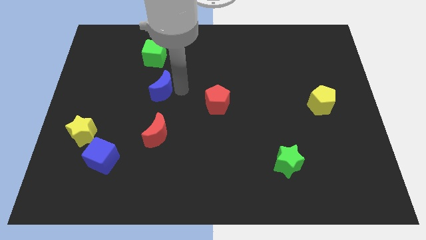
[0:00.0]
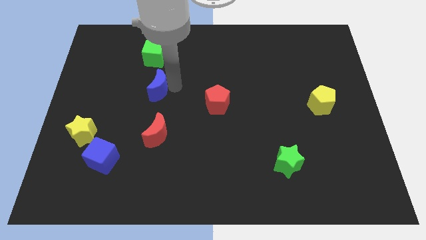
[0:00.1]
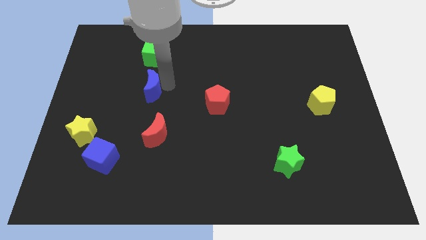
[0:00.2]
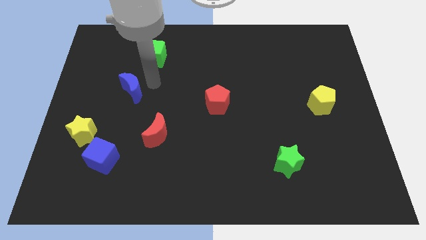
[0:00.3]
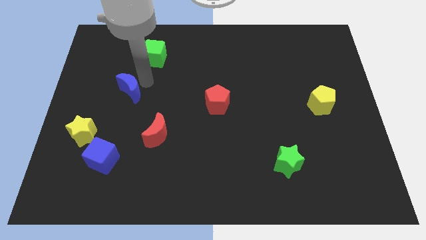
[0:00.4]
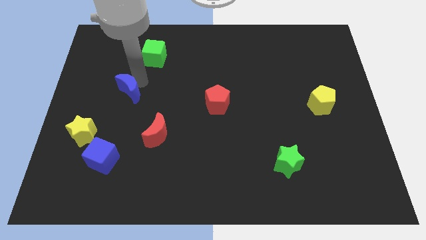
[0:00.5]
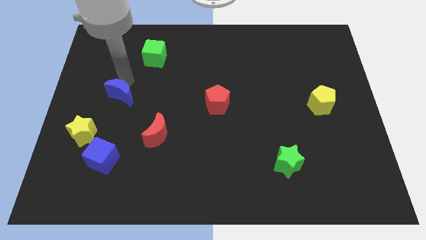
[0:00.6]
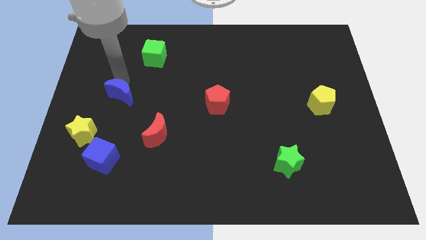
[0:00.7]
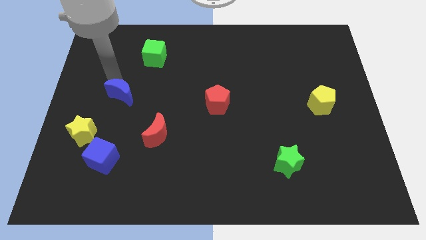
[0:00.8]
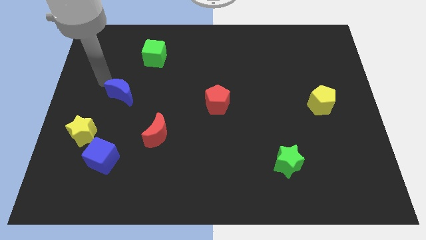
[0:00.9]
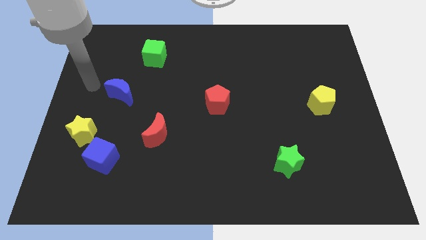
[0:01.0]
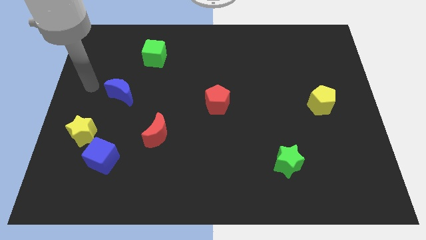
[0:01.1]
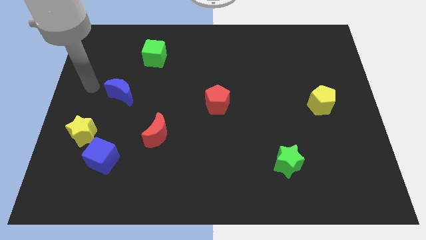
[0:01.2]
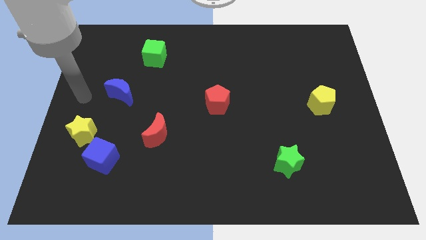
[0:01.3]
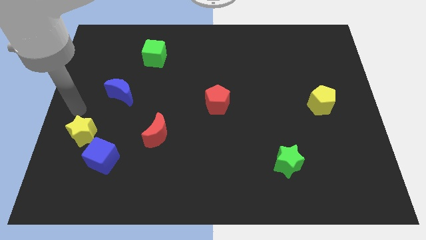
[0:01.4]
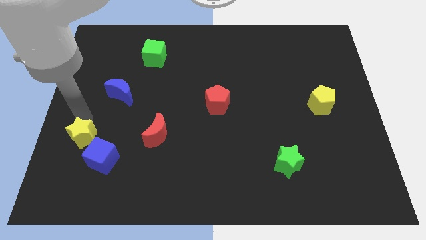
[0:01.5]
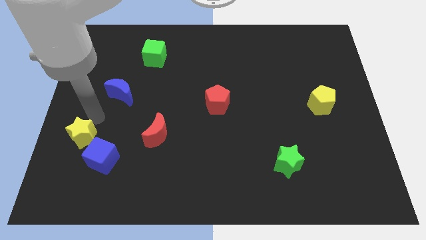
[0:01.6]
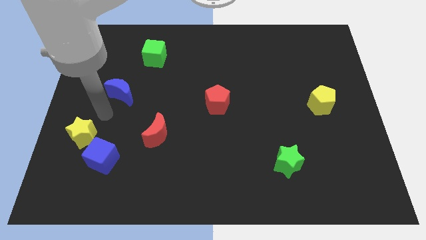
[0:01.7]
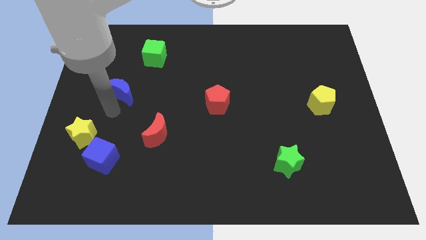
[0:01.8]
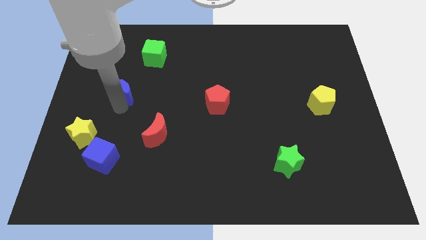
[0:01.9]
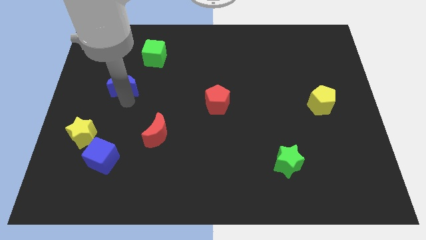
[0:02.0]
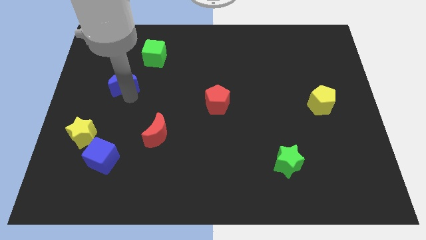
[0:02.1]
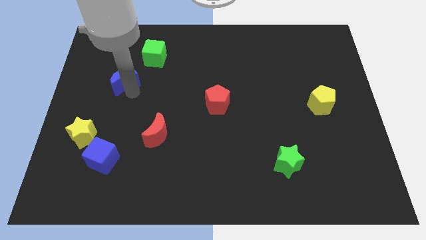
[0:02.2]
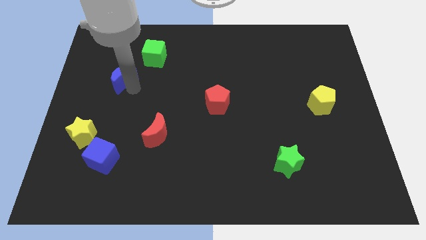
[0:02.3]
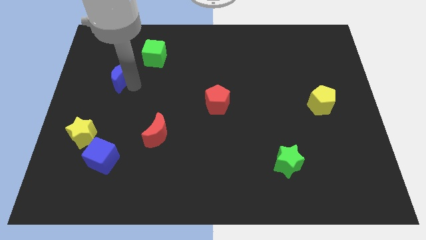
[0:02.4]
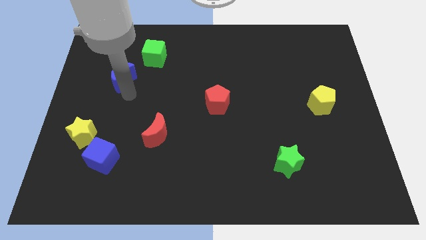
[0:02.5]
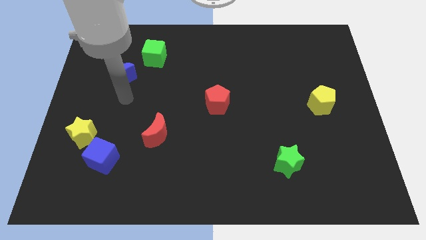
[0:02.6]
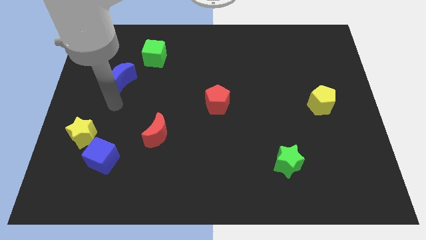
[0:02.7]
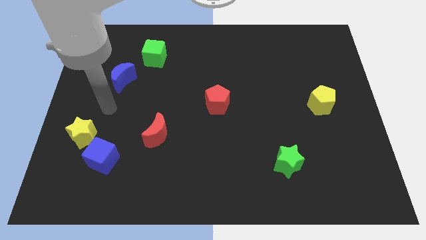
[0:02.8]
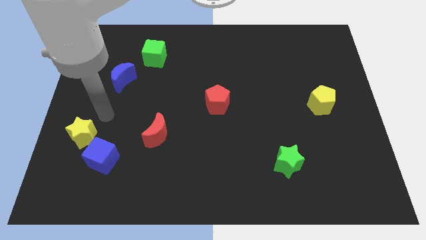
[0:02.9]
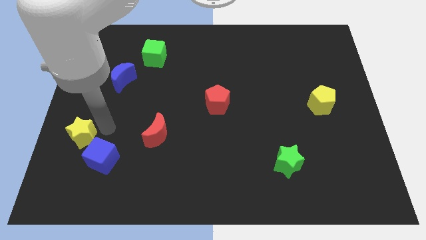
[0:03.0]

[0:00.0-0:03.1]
move the blue crescent to the bottom left side of the green cube

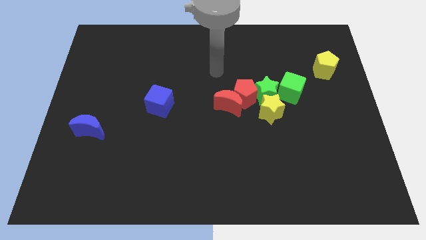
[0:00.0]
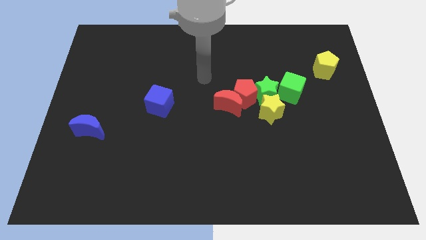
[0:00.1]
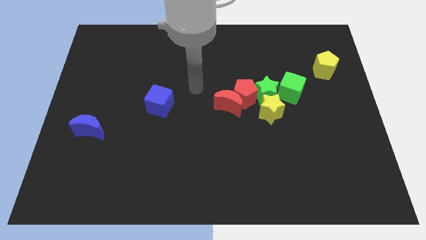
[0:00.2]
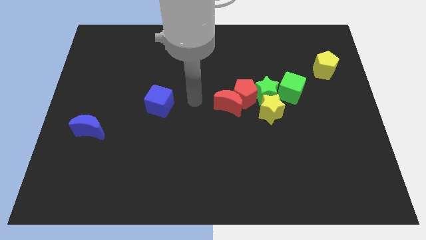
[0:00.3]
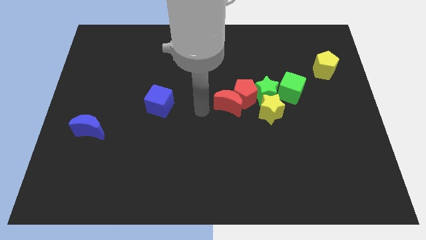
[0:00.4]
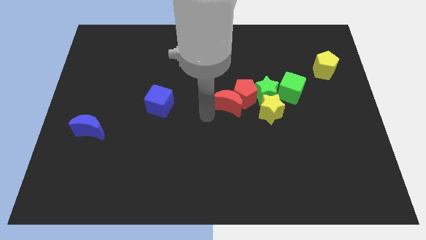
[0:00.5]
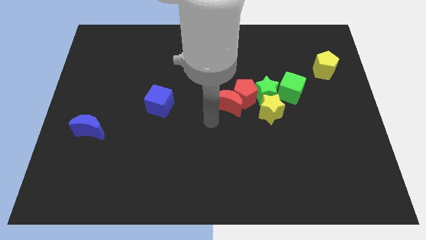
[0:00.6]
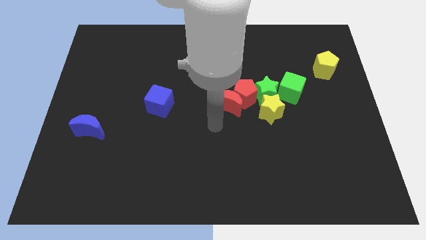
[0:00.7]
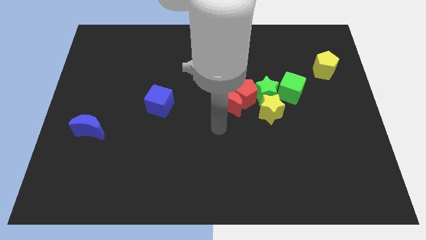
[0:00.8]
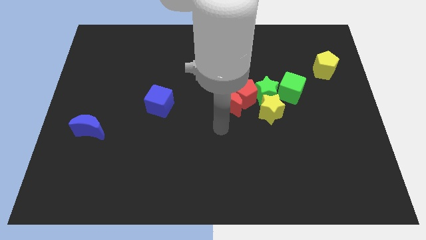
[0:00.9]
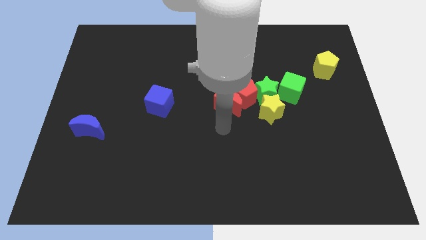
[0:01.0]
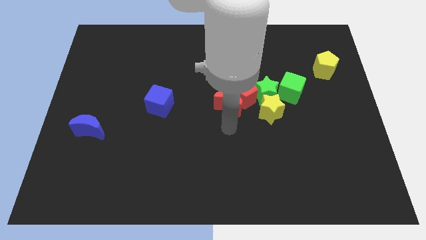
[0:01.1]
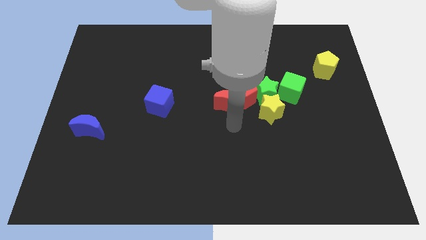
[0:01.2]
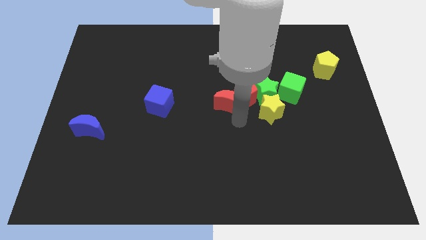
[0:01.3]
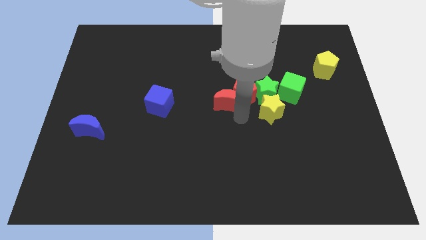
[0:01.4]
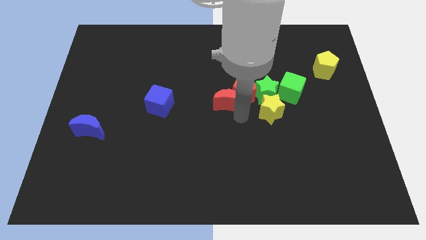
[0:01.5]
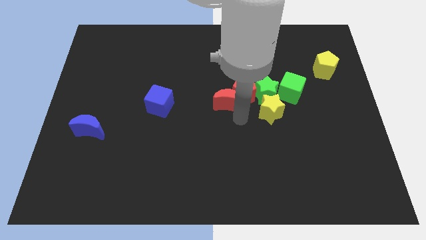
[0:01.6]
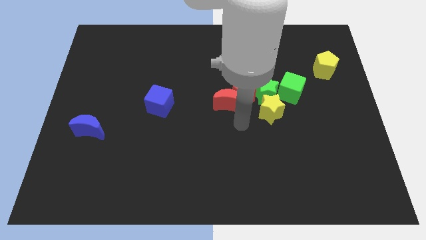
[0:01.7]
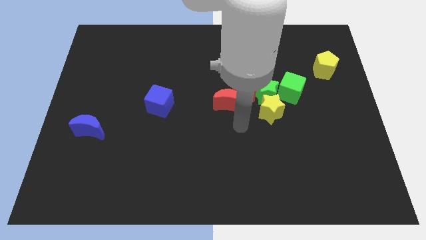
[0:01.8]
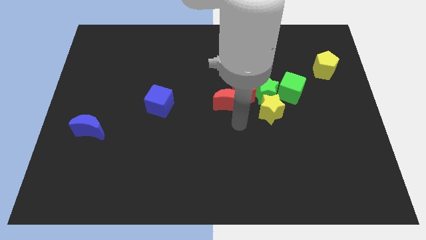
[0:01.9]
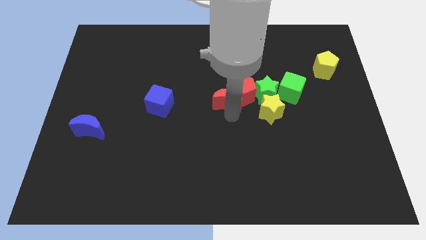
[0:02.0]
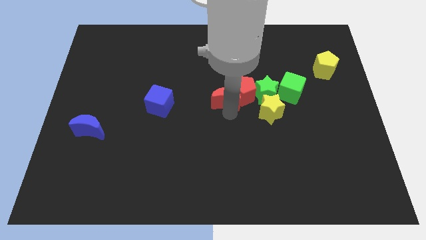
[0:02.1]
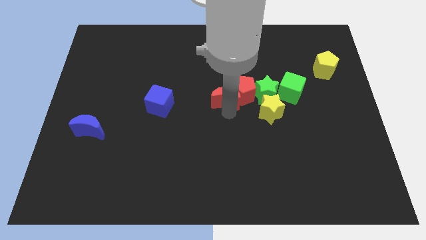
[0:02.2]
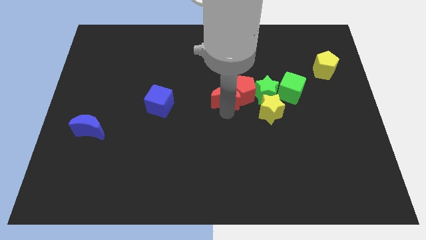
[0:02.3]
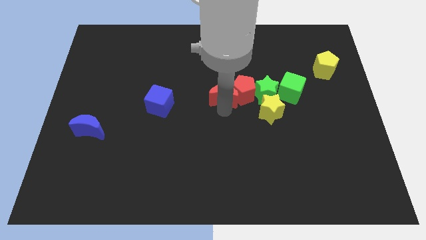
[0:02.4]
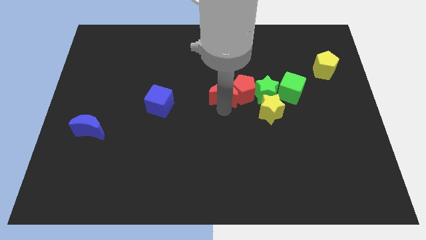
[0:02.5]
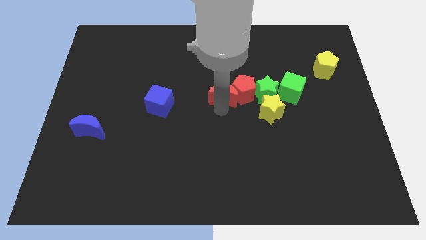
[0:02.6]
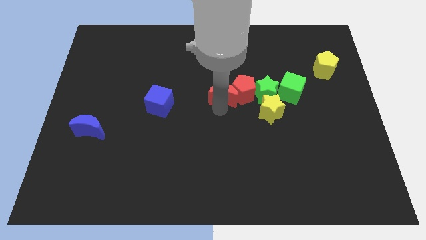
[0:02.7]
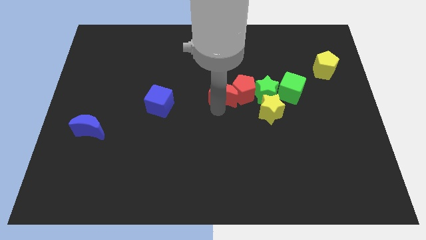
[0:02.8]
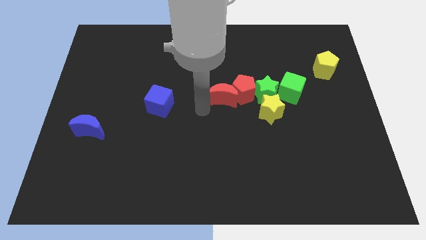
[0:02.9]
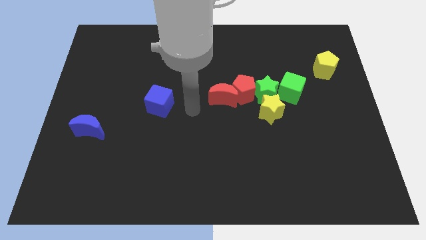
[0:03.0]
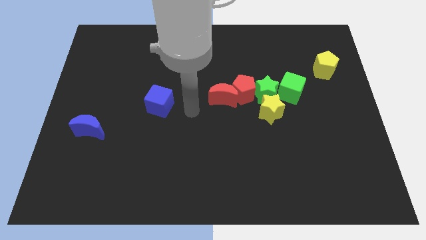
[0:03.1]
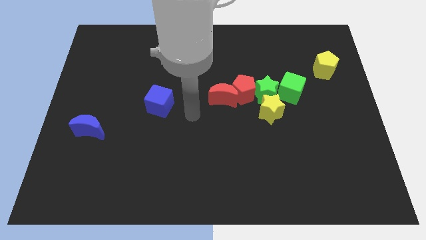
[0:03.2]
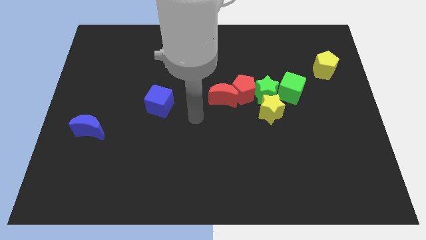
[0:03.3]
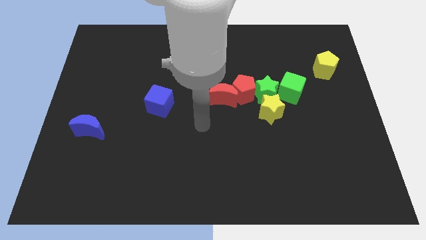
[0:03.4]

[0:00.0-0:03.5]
move the red blocks slightly up

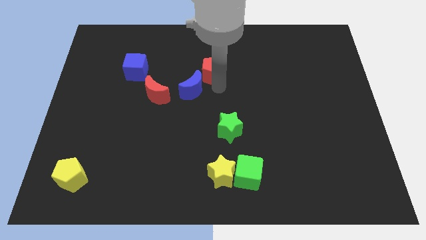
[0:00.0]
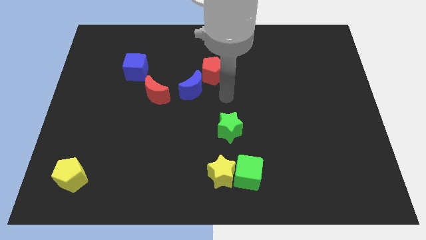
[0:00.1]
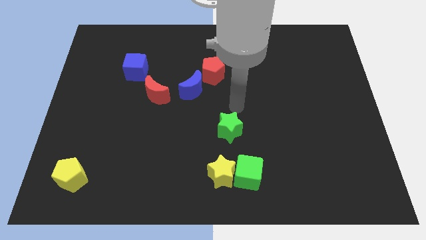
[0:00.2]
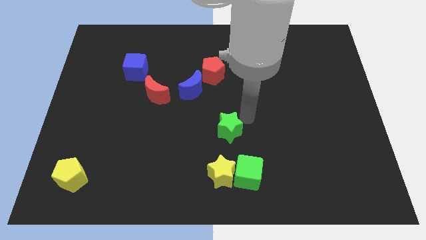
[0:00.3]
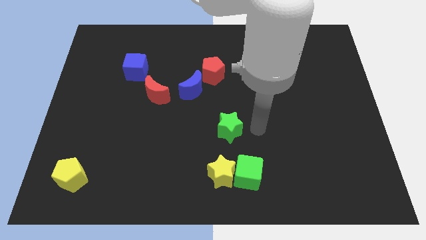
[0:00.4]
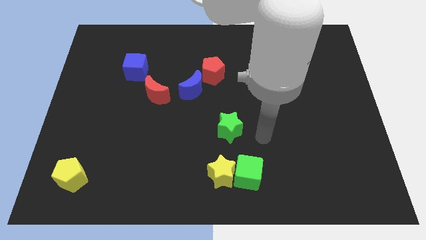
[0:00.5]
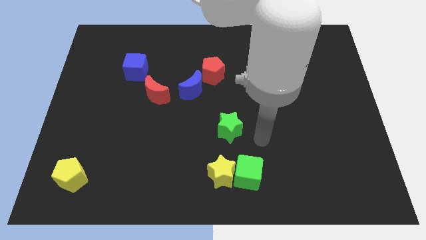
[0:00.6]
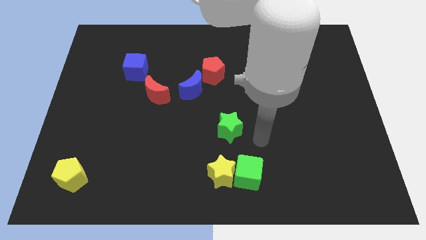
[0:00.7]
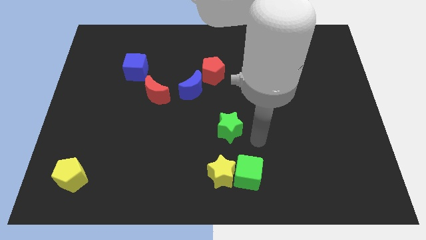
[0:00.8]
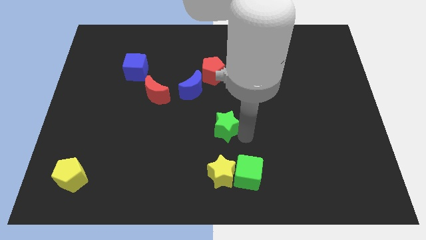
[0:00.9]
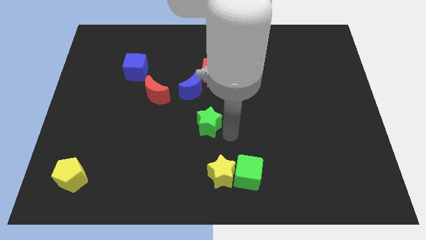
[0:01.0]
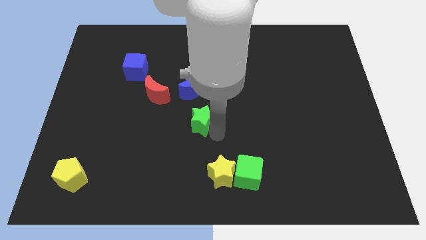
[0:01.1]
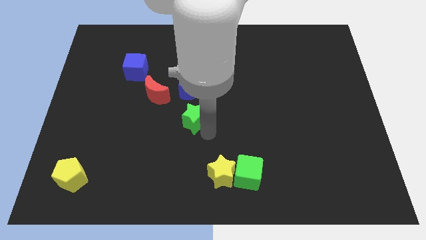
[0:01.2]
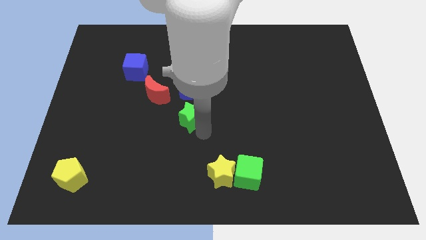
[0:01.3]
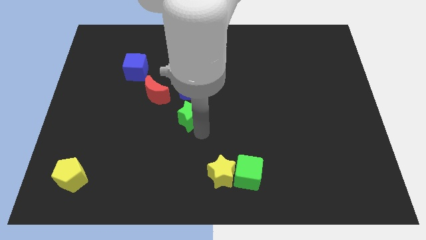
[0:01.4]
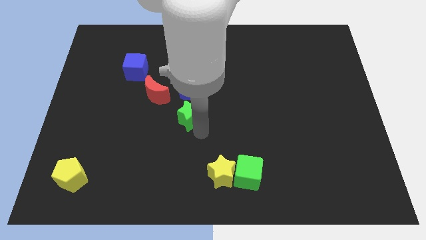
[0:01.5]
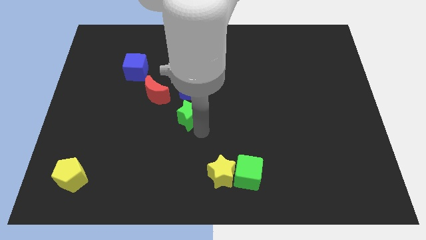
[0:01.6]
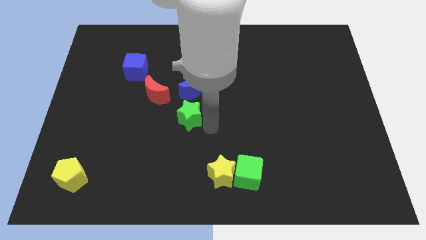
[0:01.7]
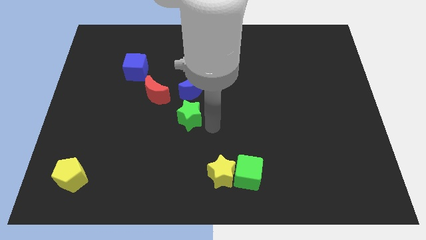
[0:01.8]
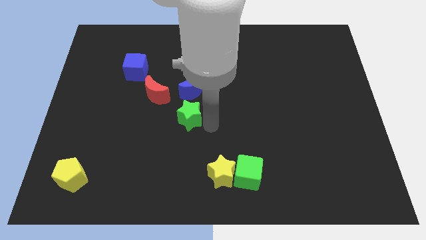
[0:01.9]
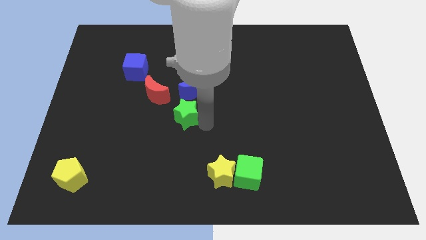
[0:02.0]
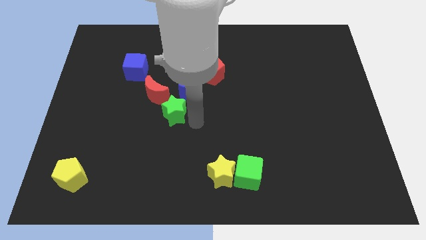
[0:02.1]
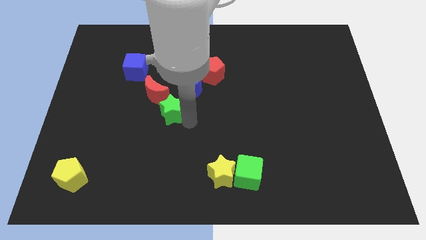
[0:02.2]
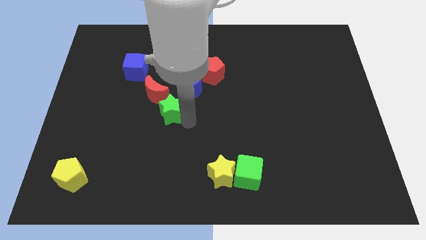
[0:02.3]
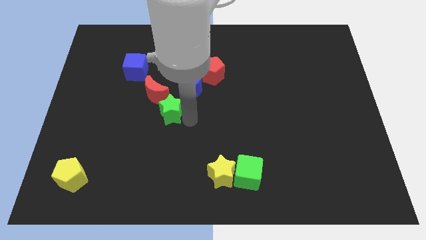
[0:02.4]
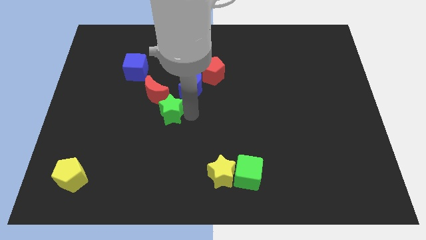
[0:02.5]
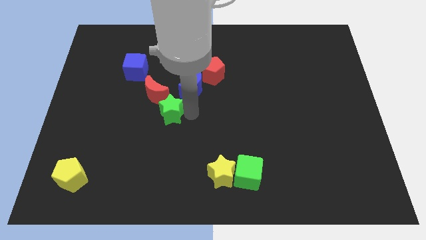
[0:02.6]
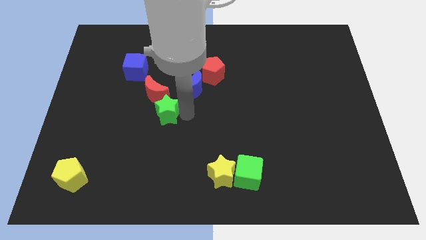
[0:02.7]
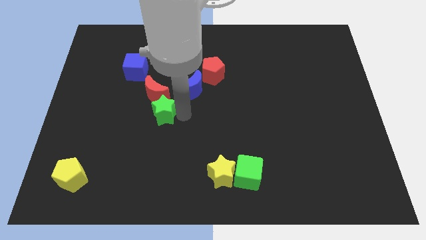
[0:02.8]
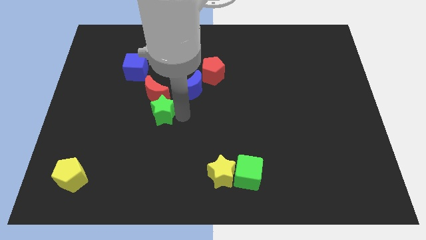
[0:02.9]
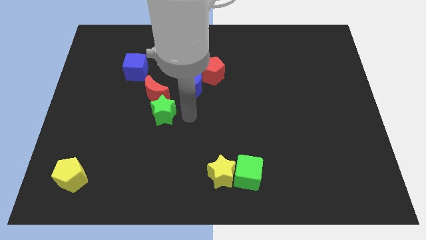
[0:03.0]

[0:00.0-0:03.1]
move the green star at the bottom side of the red moon
